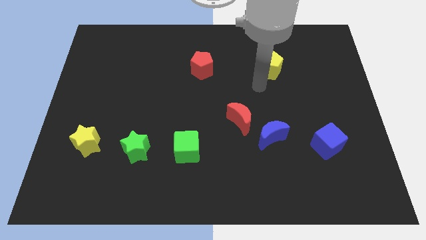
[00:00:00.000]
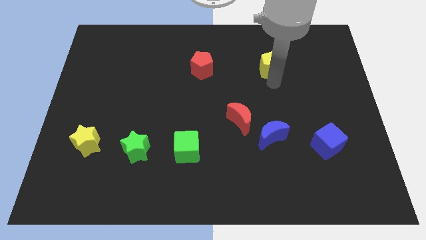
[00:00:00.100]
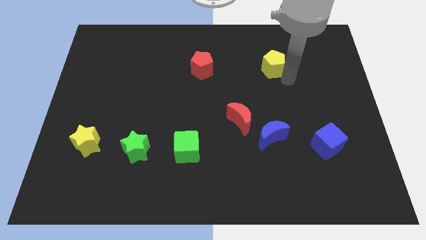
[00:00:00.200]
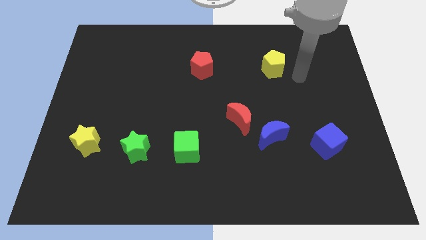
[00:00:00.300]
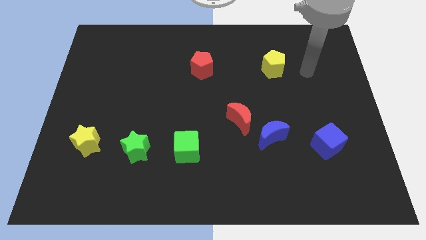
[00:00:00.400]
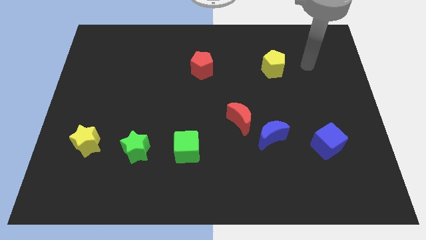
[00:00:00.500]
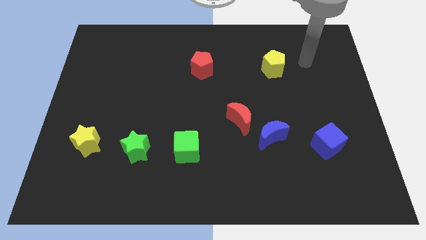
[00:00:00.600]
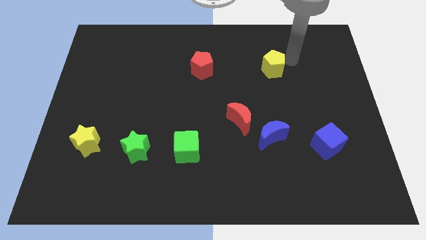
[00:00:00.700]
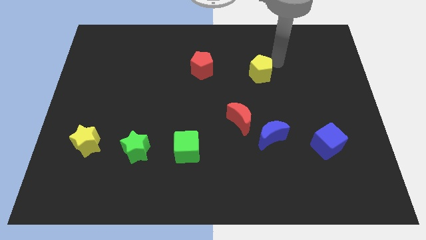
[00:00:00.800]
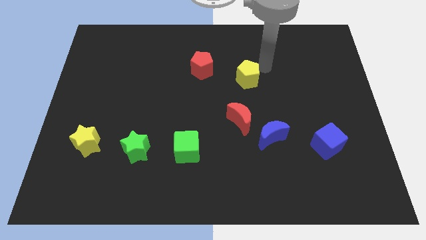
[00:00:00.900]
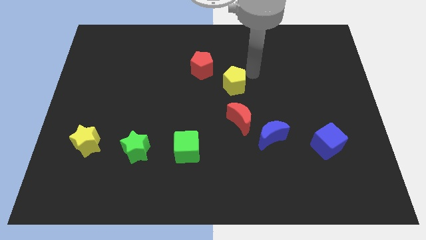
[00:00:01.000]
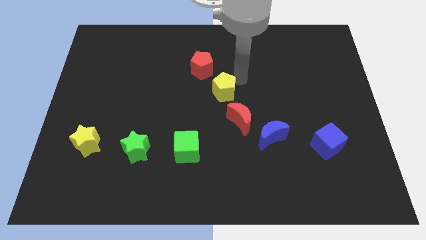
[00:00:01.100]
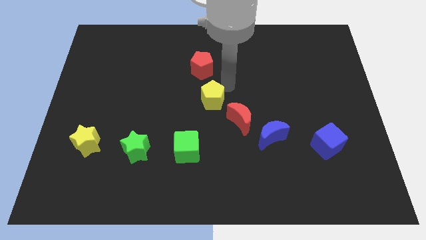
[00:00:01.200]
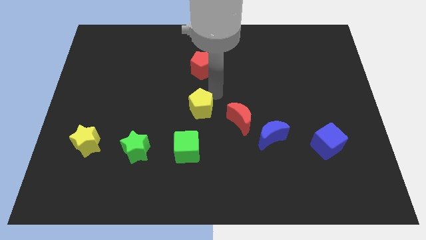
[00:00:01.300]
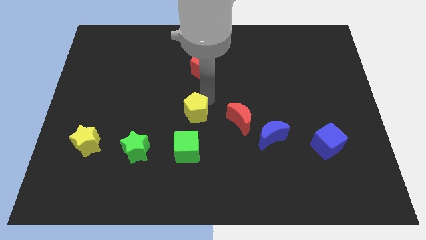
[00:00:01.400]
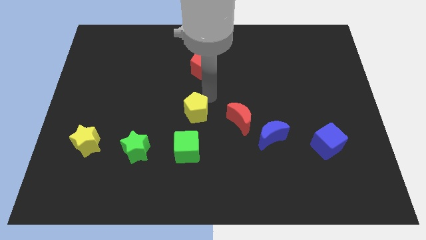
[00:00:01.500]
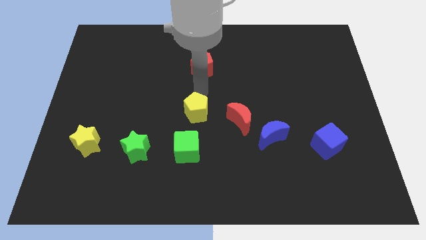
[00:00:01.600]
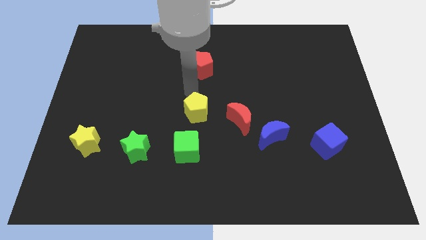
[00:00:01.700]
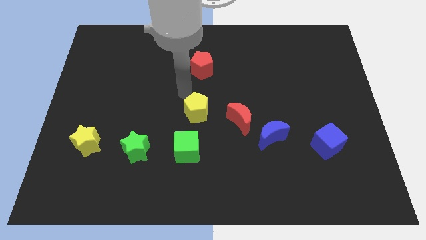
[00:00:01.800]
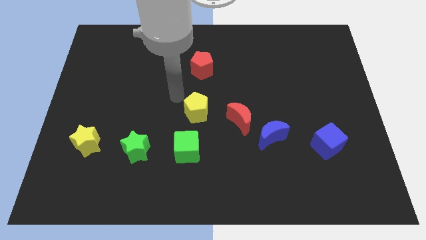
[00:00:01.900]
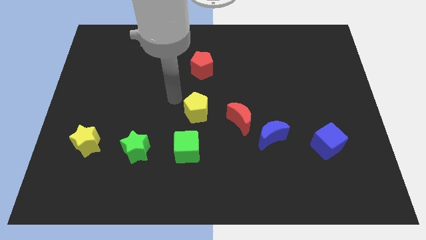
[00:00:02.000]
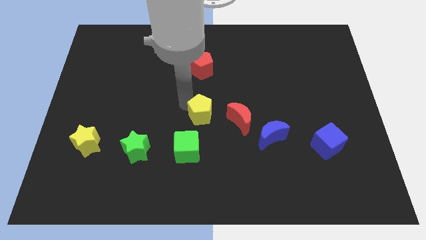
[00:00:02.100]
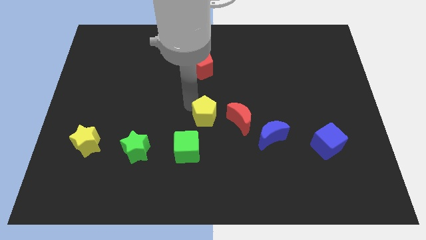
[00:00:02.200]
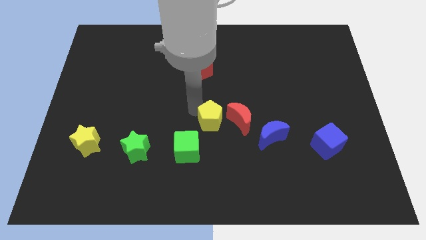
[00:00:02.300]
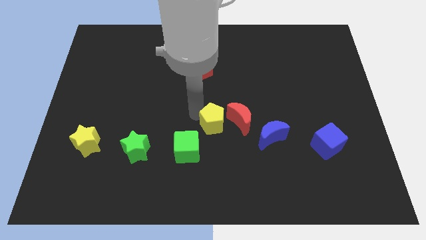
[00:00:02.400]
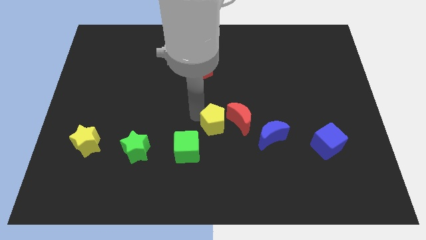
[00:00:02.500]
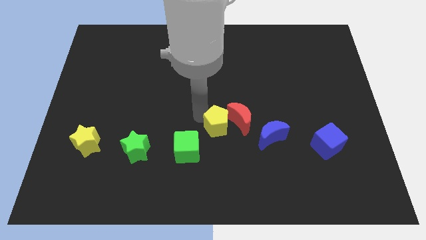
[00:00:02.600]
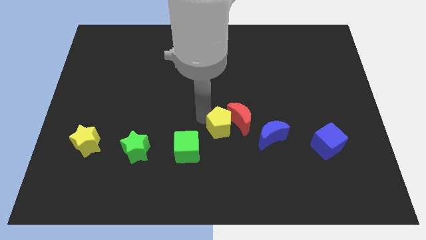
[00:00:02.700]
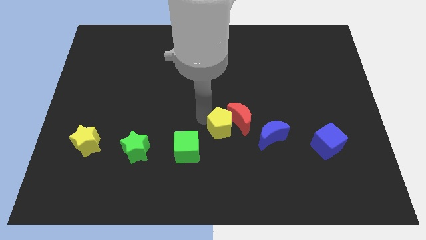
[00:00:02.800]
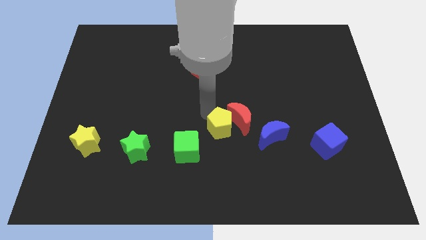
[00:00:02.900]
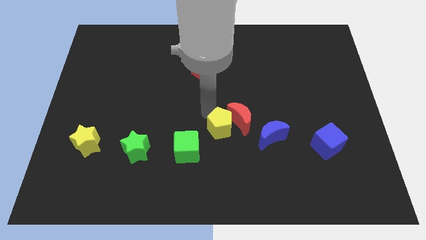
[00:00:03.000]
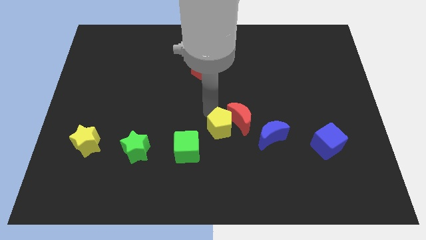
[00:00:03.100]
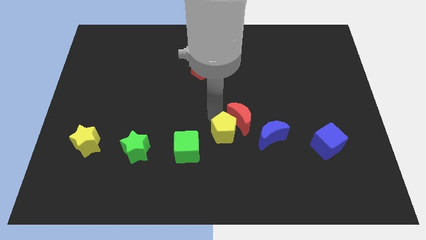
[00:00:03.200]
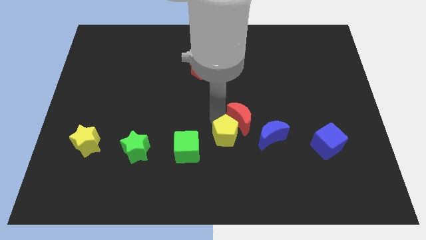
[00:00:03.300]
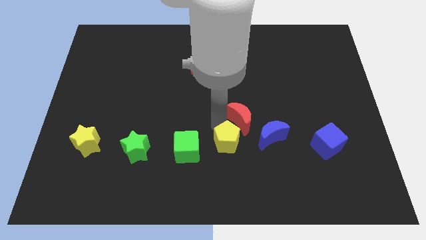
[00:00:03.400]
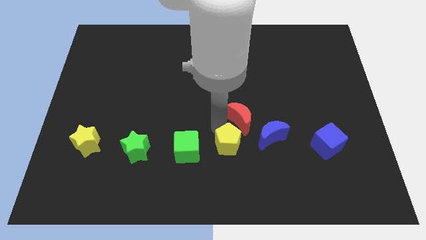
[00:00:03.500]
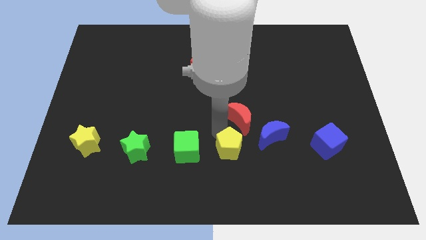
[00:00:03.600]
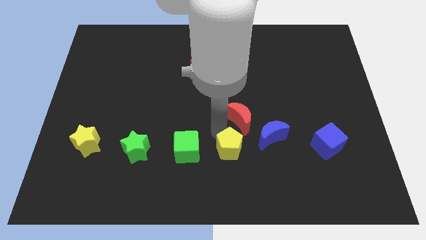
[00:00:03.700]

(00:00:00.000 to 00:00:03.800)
push the yellow pentagon right to the green cube

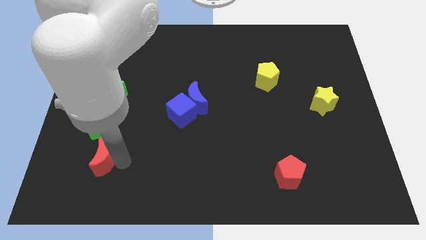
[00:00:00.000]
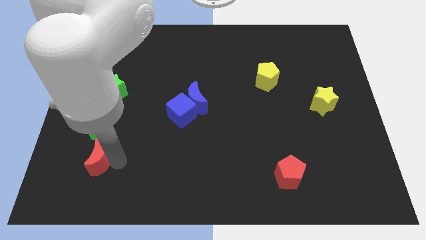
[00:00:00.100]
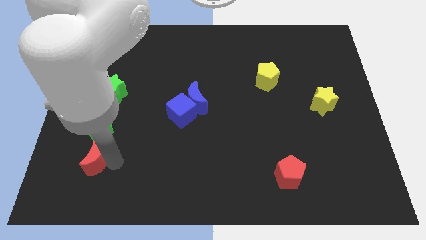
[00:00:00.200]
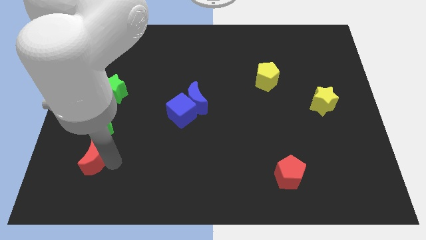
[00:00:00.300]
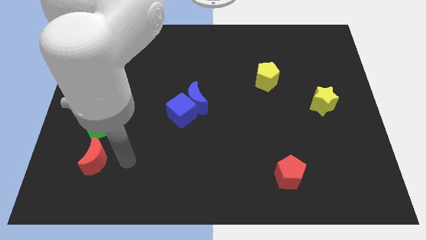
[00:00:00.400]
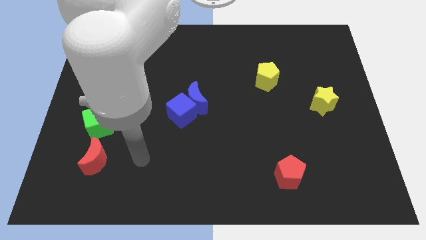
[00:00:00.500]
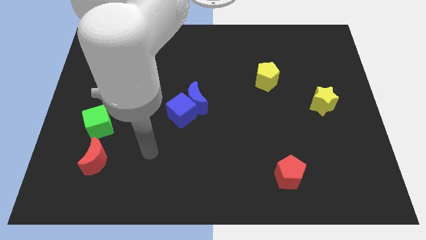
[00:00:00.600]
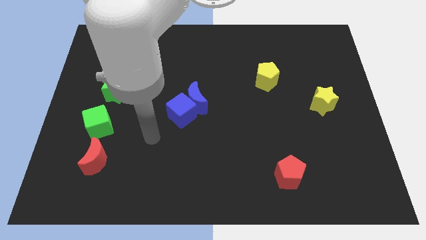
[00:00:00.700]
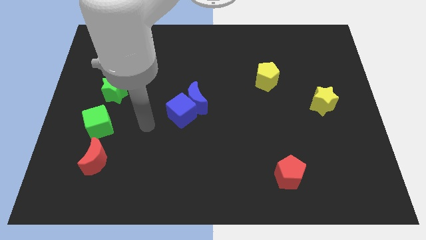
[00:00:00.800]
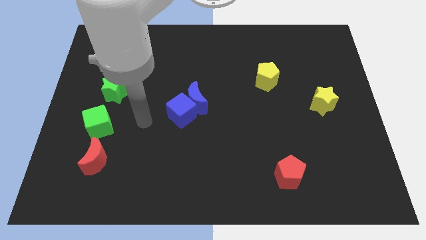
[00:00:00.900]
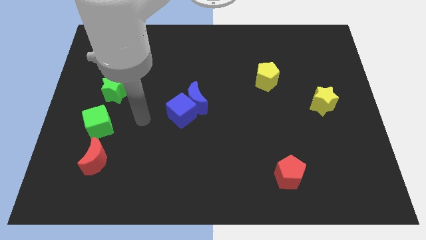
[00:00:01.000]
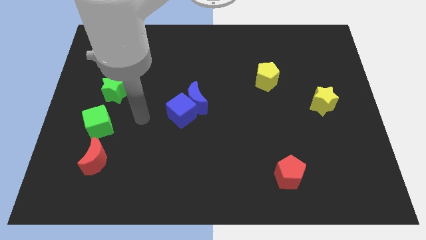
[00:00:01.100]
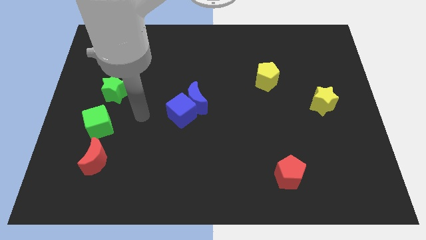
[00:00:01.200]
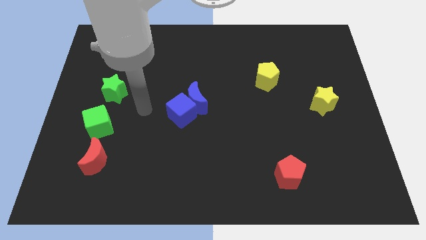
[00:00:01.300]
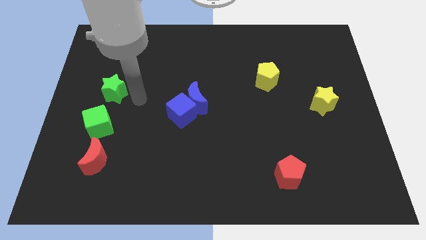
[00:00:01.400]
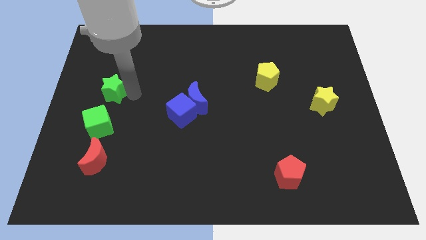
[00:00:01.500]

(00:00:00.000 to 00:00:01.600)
place your arm at the right of green star

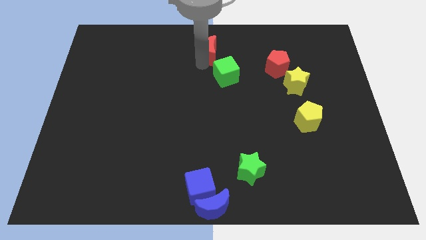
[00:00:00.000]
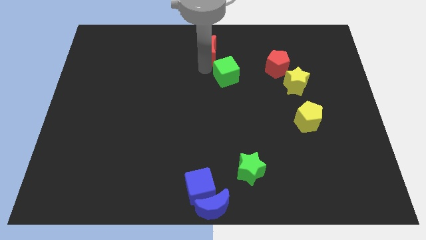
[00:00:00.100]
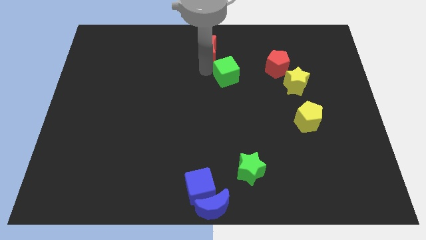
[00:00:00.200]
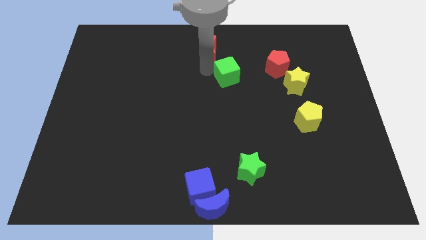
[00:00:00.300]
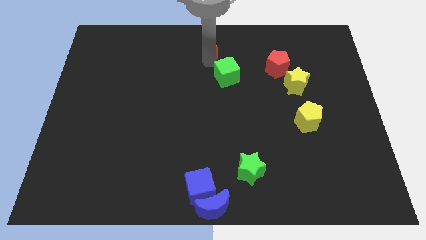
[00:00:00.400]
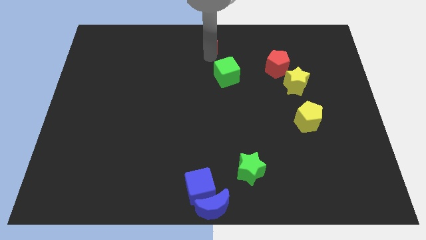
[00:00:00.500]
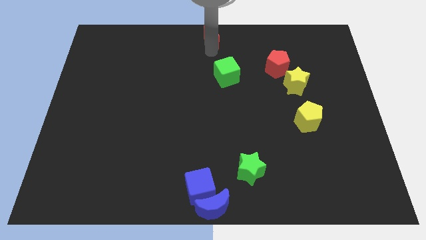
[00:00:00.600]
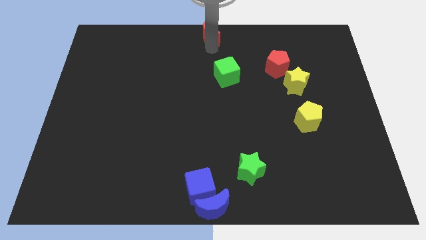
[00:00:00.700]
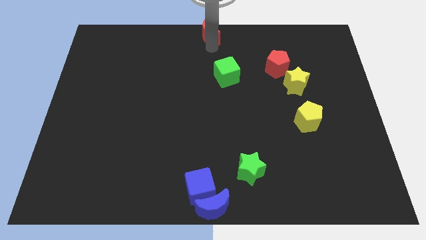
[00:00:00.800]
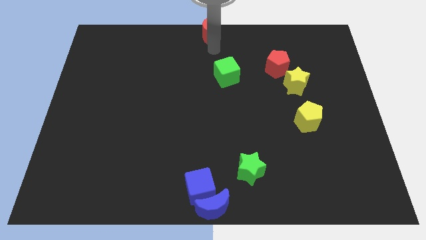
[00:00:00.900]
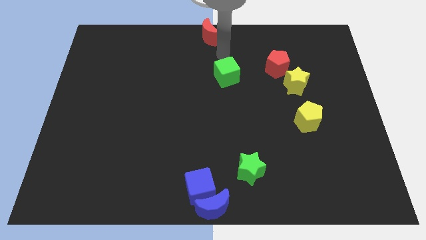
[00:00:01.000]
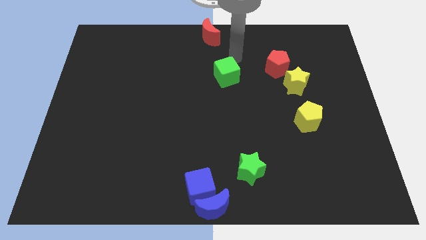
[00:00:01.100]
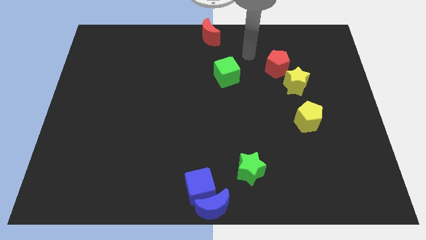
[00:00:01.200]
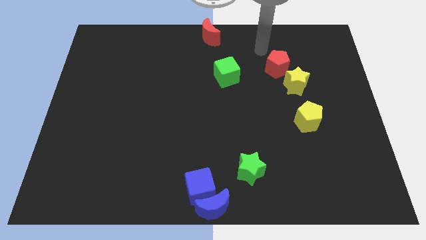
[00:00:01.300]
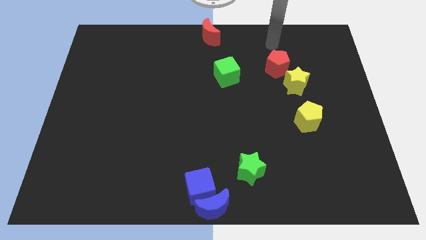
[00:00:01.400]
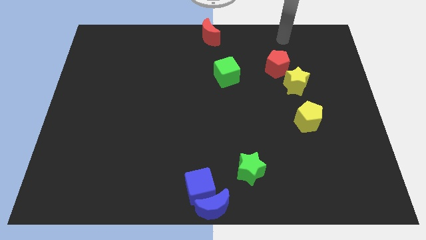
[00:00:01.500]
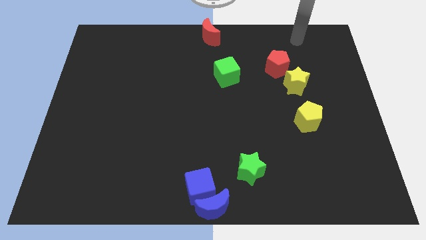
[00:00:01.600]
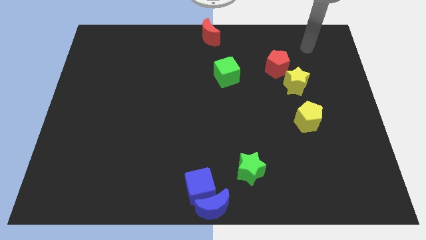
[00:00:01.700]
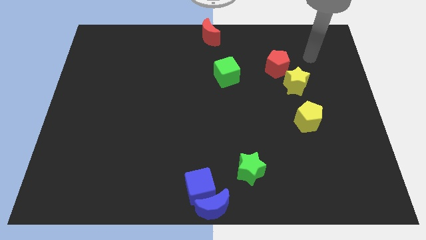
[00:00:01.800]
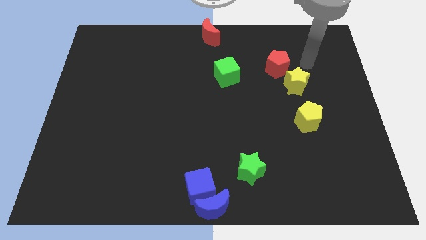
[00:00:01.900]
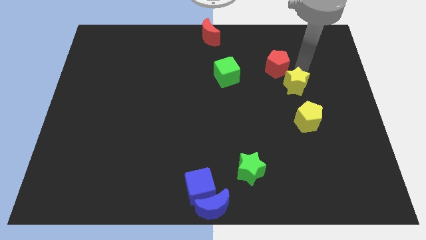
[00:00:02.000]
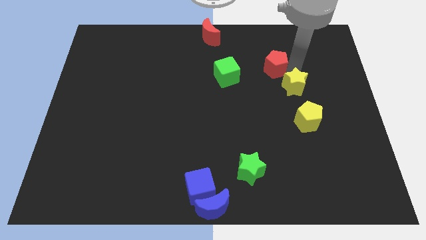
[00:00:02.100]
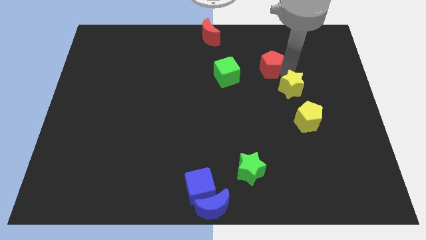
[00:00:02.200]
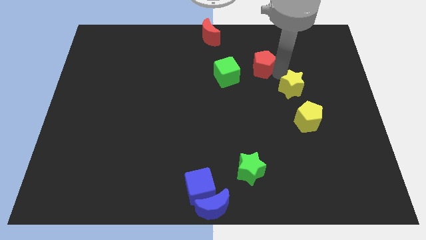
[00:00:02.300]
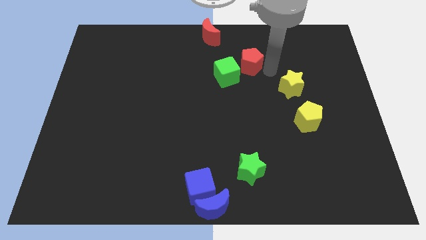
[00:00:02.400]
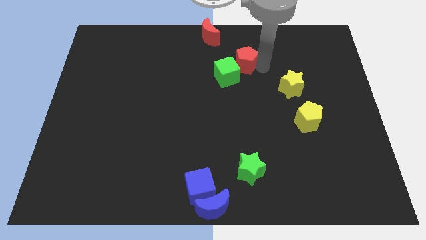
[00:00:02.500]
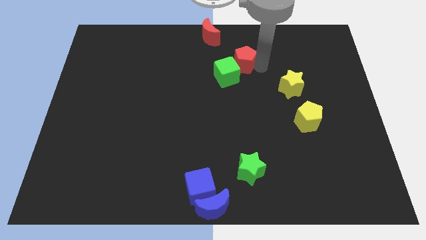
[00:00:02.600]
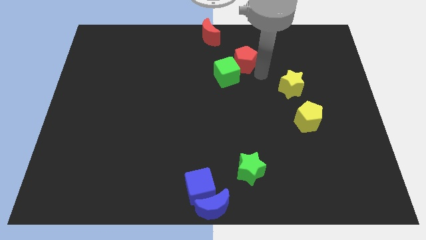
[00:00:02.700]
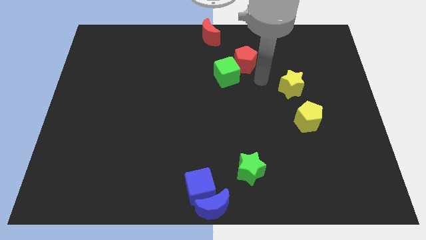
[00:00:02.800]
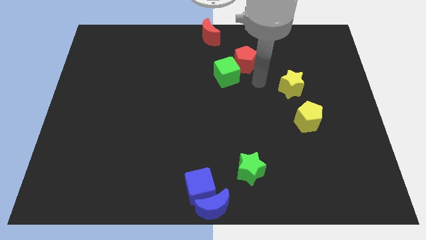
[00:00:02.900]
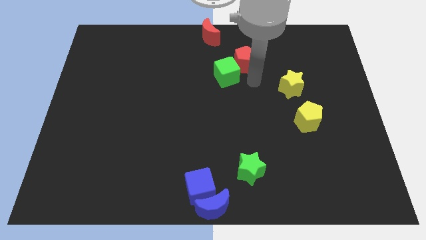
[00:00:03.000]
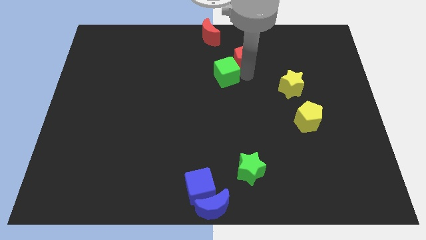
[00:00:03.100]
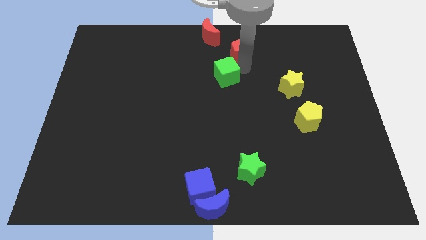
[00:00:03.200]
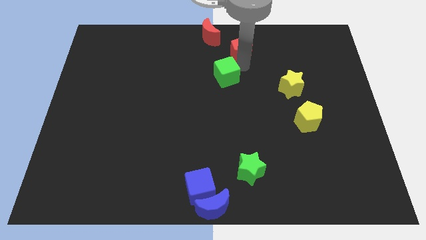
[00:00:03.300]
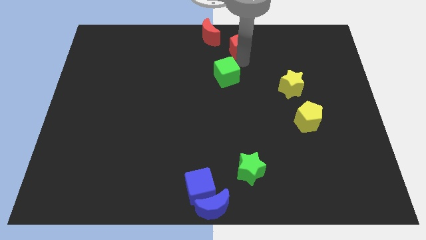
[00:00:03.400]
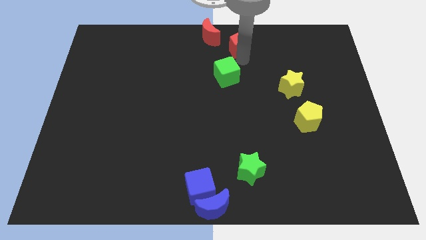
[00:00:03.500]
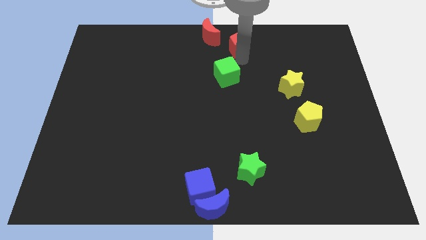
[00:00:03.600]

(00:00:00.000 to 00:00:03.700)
drag the red pentagon towards the red moon
